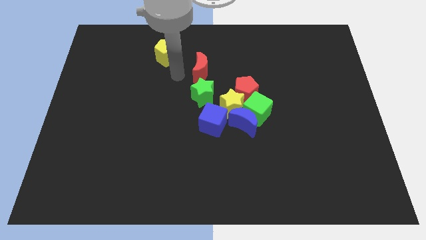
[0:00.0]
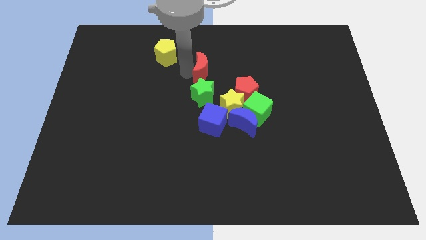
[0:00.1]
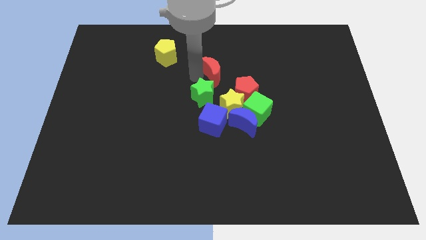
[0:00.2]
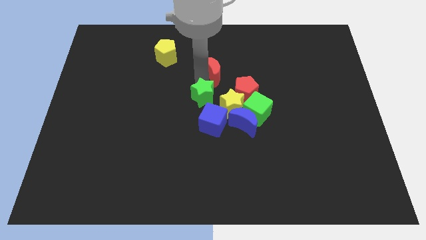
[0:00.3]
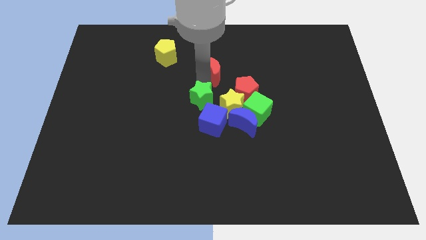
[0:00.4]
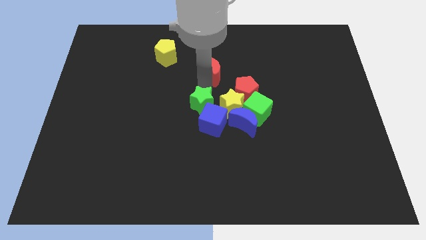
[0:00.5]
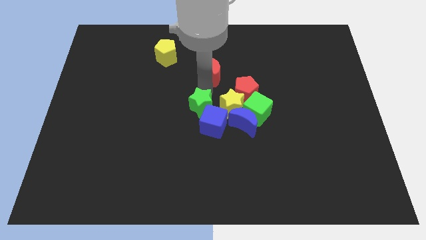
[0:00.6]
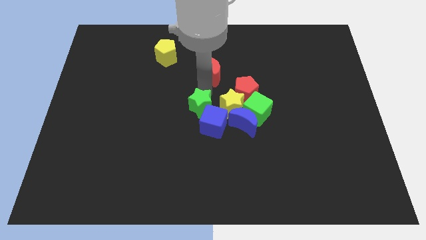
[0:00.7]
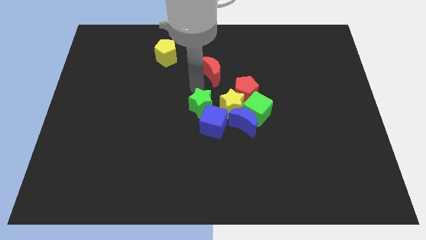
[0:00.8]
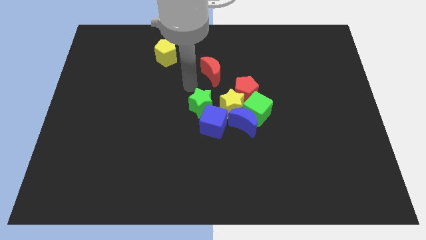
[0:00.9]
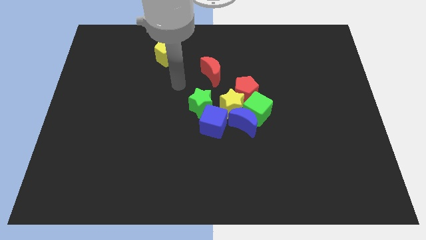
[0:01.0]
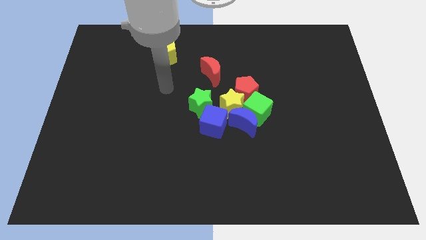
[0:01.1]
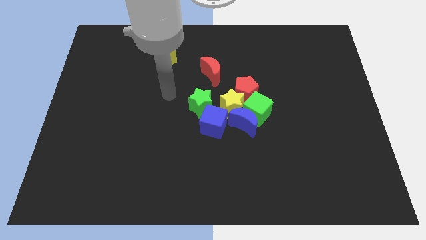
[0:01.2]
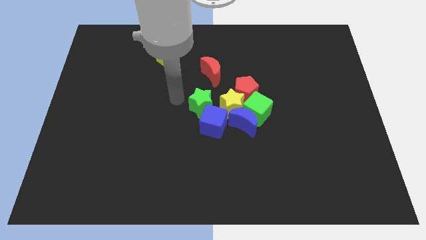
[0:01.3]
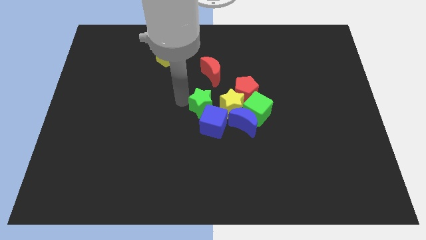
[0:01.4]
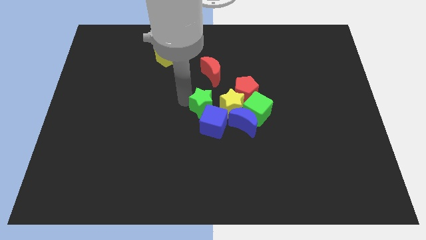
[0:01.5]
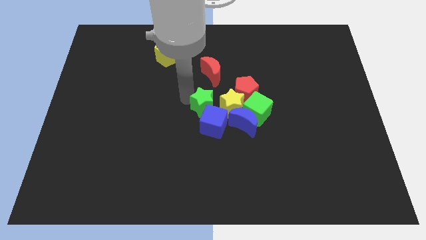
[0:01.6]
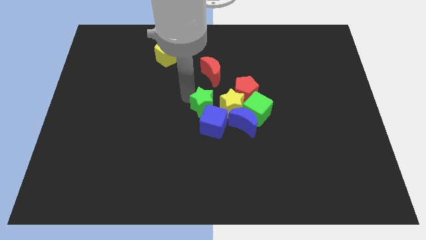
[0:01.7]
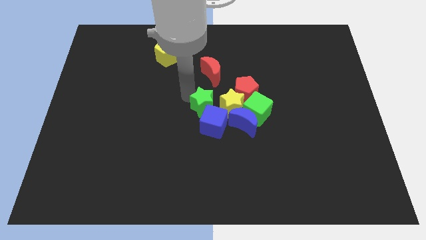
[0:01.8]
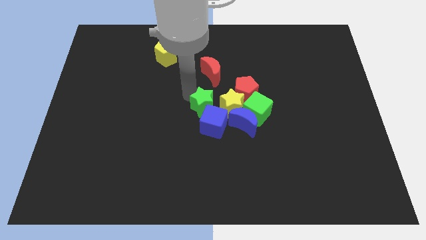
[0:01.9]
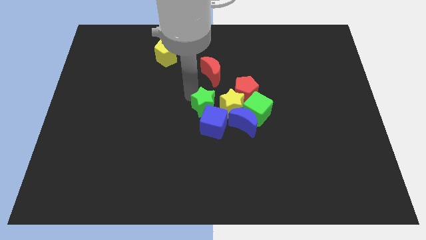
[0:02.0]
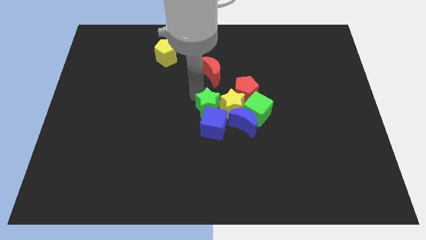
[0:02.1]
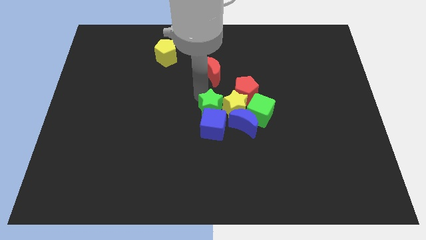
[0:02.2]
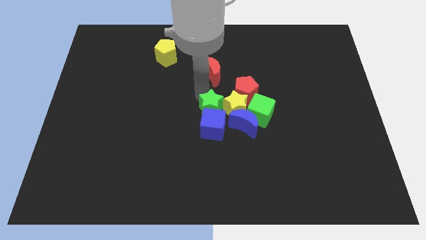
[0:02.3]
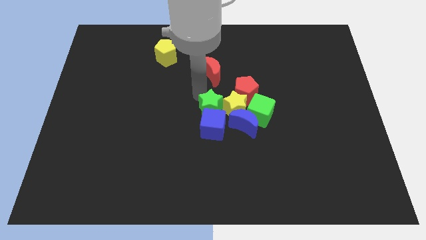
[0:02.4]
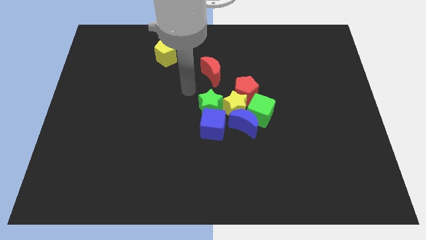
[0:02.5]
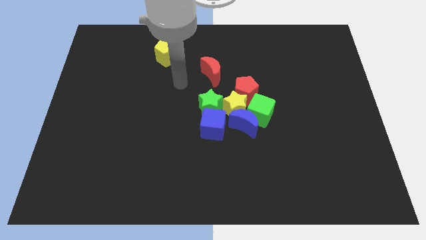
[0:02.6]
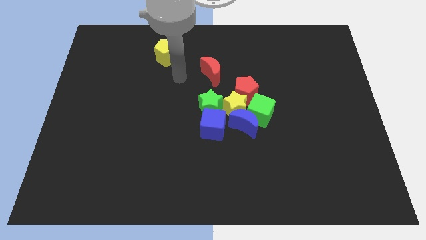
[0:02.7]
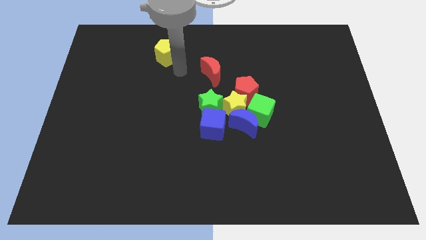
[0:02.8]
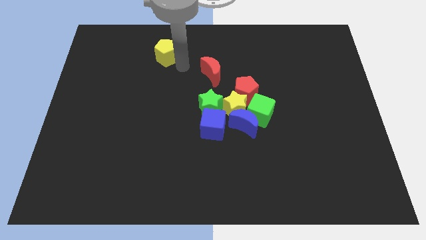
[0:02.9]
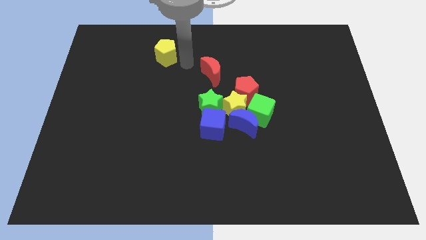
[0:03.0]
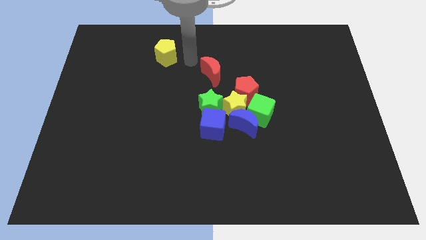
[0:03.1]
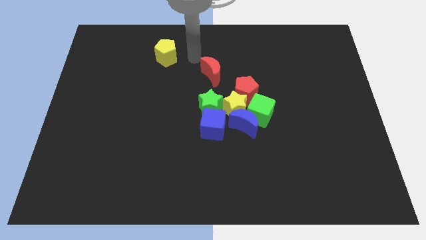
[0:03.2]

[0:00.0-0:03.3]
push the green star into the blue cube

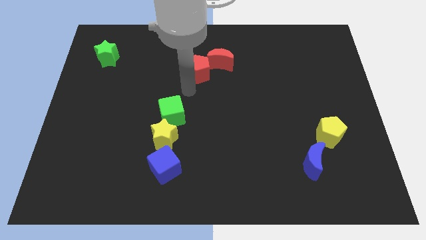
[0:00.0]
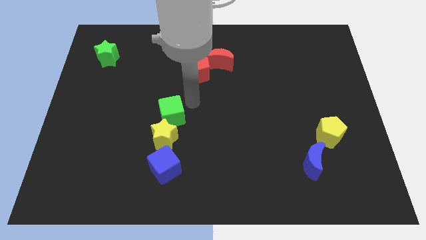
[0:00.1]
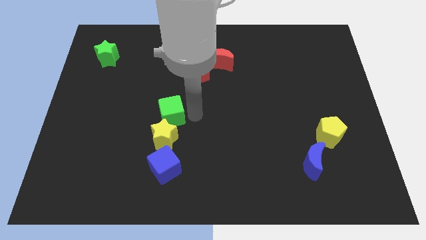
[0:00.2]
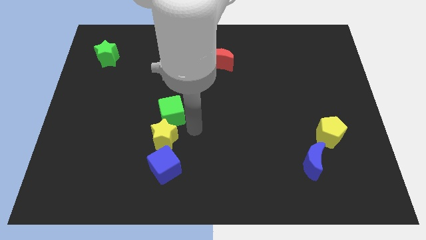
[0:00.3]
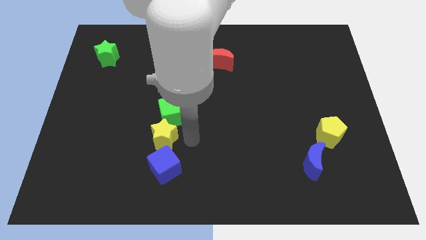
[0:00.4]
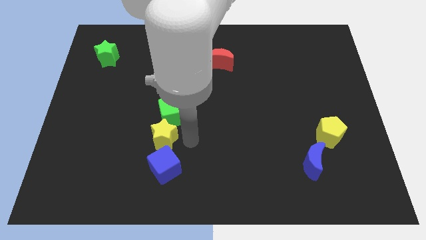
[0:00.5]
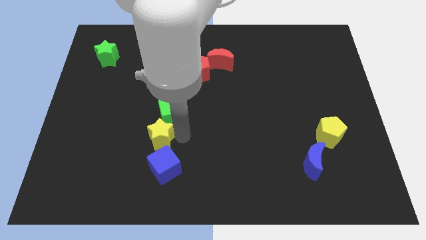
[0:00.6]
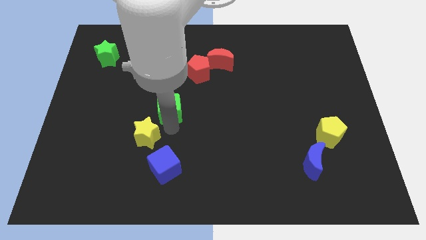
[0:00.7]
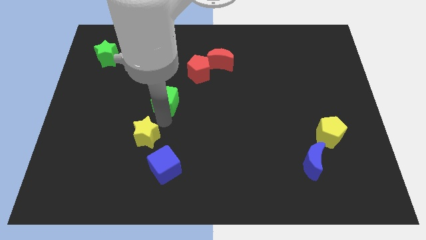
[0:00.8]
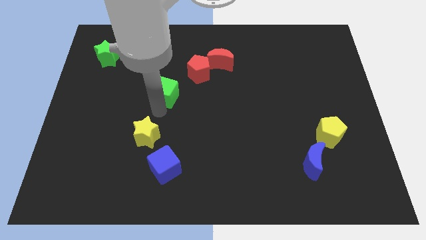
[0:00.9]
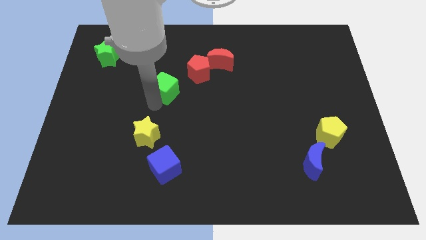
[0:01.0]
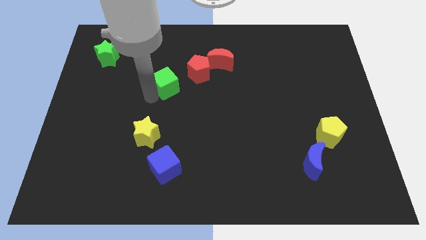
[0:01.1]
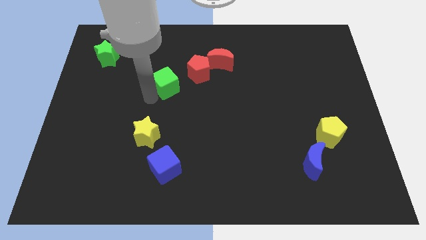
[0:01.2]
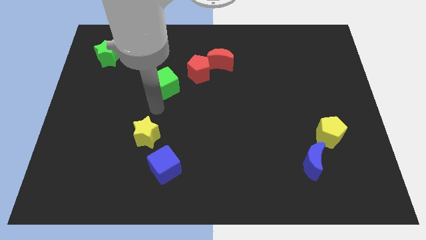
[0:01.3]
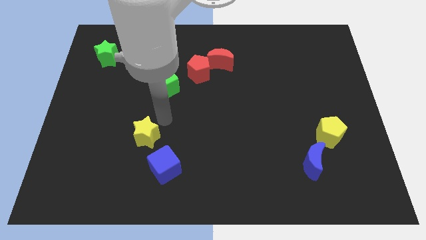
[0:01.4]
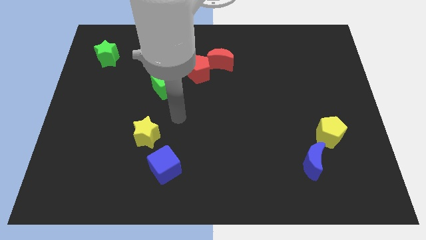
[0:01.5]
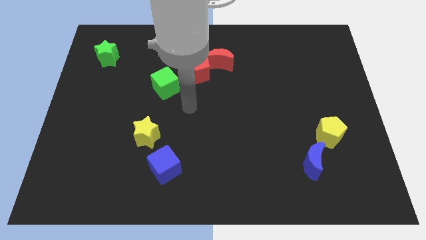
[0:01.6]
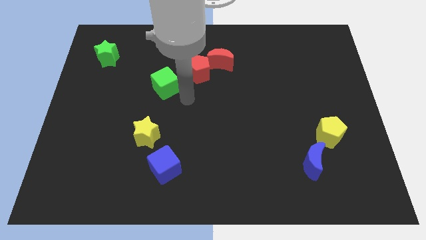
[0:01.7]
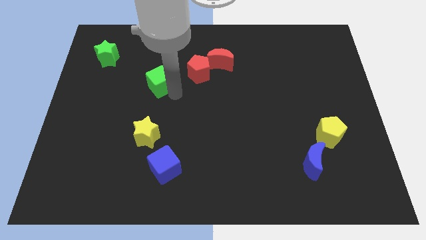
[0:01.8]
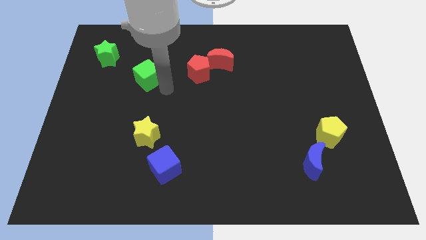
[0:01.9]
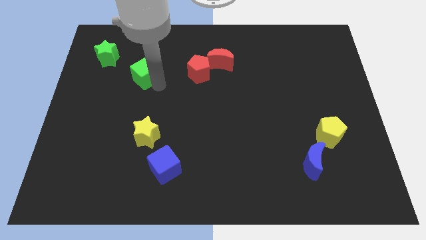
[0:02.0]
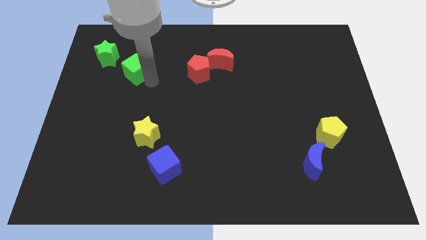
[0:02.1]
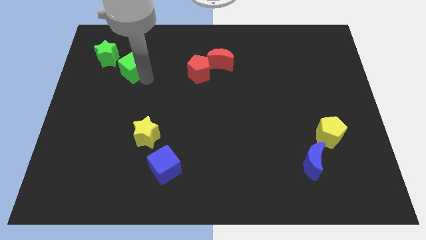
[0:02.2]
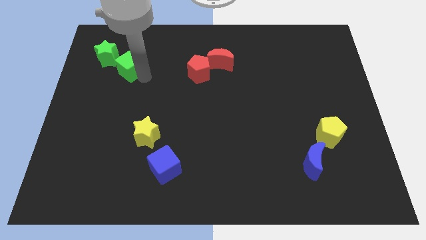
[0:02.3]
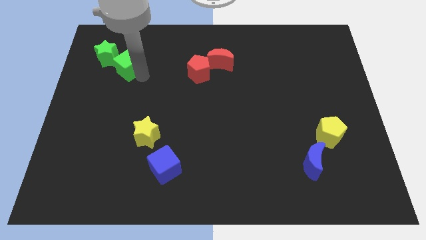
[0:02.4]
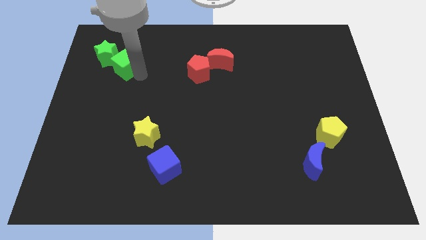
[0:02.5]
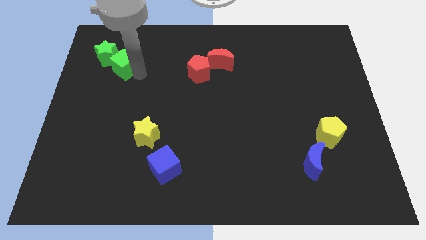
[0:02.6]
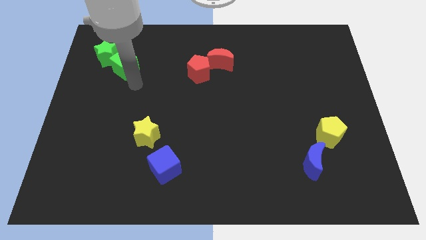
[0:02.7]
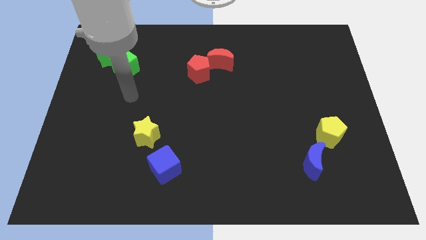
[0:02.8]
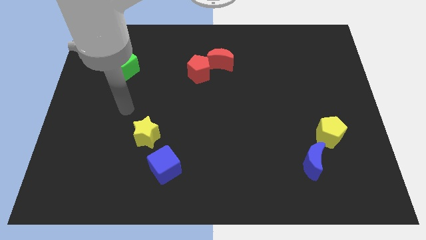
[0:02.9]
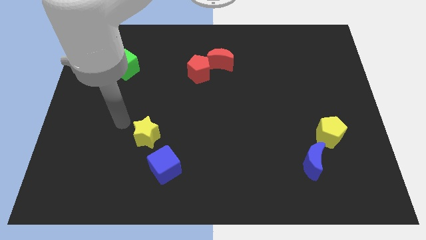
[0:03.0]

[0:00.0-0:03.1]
push the green cube to the left side of the board

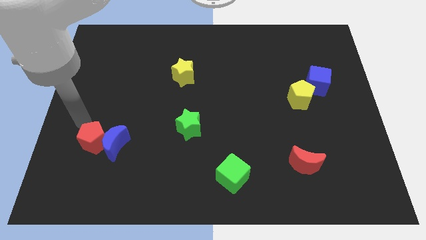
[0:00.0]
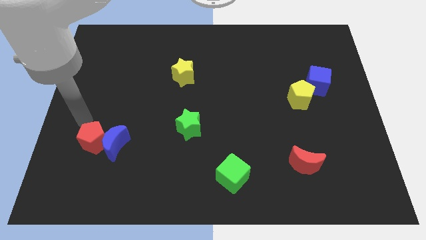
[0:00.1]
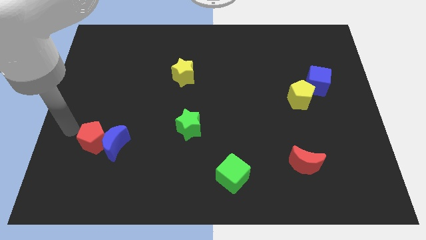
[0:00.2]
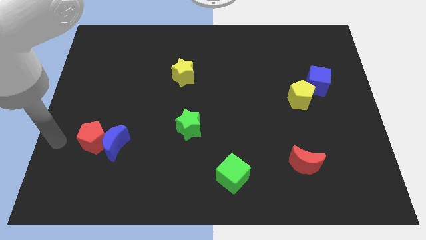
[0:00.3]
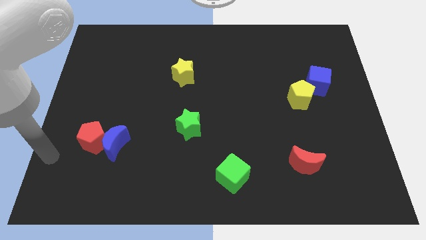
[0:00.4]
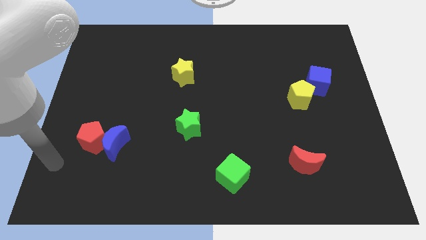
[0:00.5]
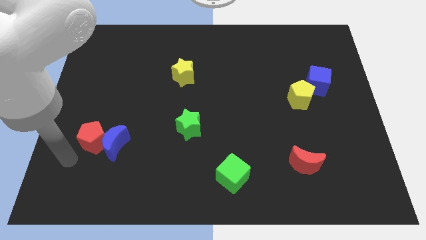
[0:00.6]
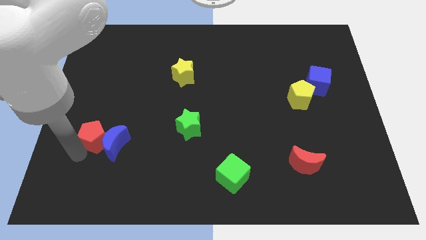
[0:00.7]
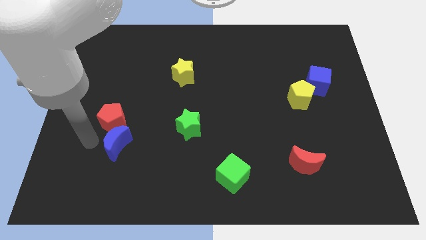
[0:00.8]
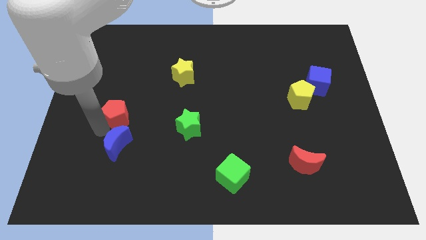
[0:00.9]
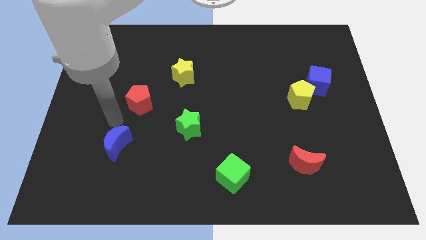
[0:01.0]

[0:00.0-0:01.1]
separate red pentagon from blue moon

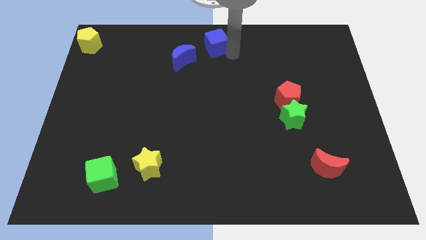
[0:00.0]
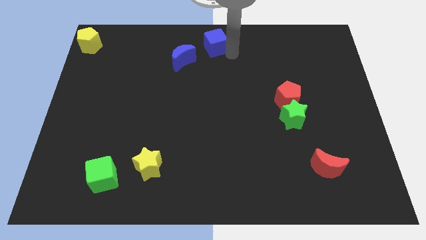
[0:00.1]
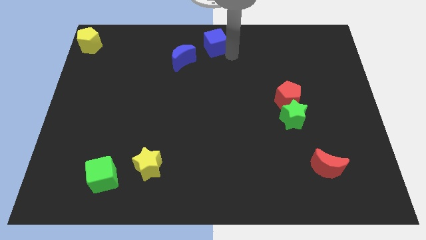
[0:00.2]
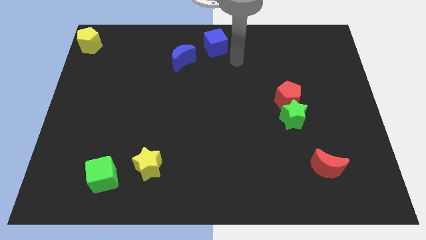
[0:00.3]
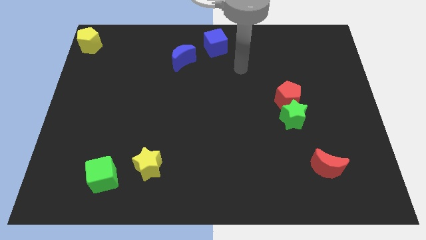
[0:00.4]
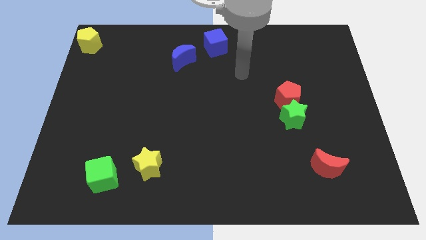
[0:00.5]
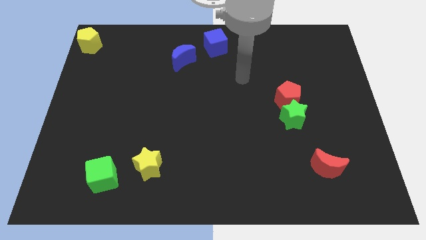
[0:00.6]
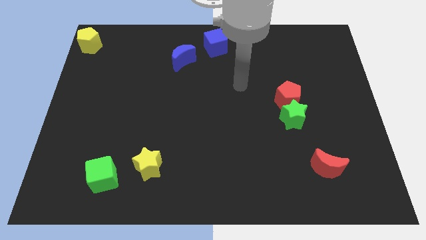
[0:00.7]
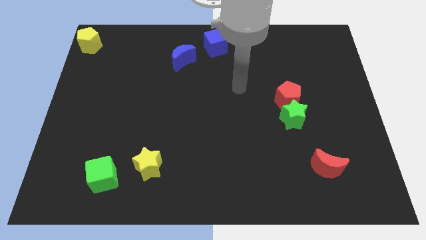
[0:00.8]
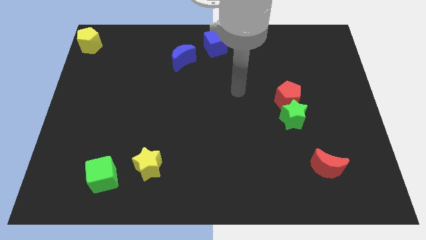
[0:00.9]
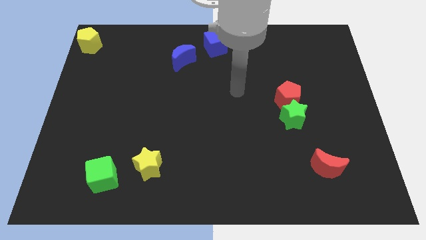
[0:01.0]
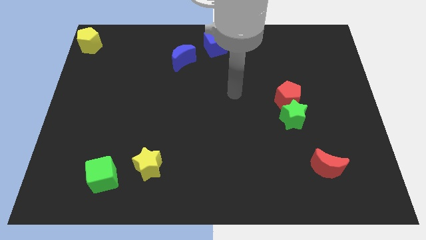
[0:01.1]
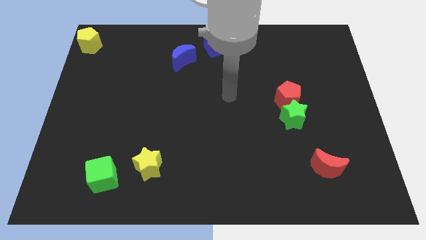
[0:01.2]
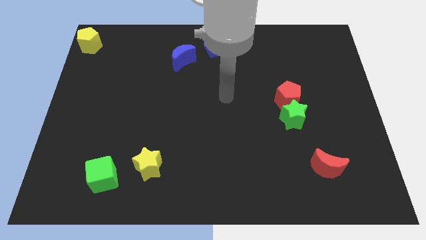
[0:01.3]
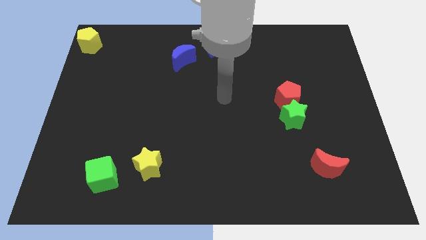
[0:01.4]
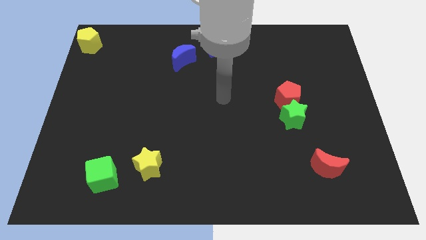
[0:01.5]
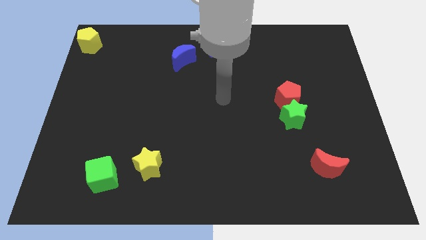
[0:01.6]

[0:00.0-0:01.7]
move your arm away from blue cube
